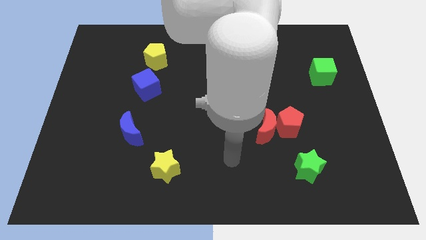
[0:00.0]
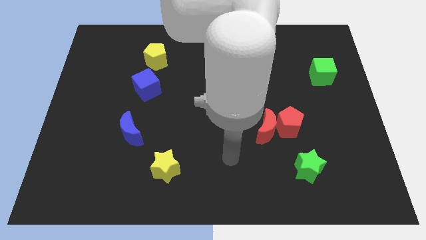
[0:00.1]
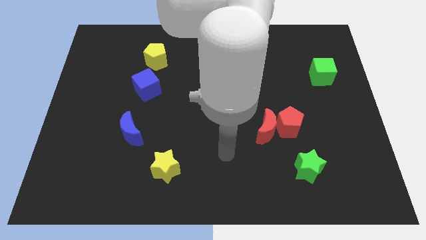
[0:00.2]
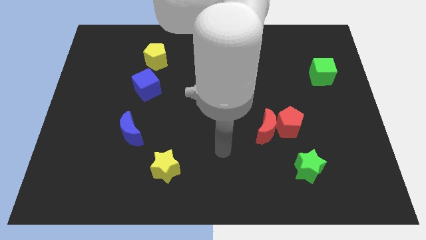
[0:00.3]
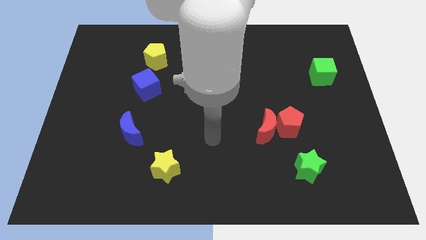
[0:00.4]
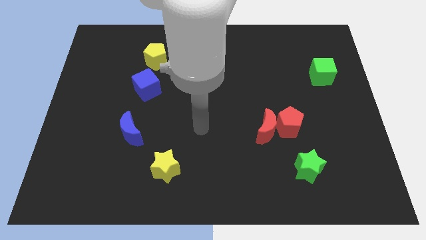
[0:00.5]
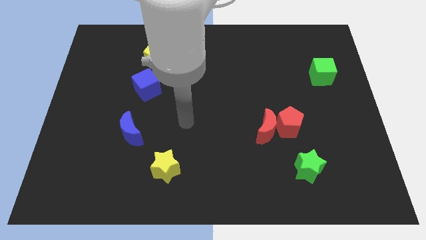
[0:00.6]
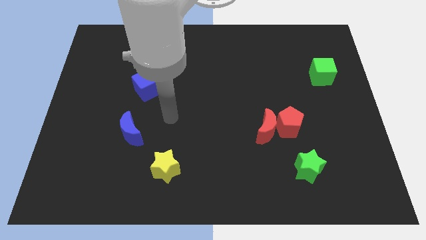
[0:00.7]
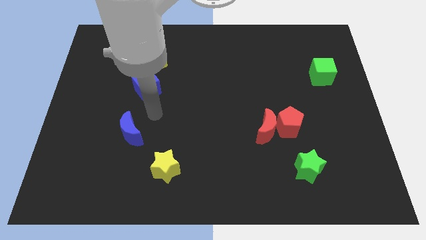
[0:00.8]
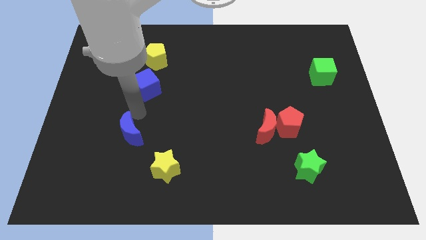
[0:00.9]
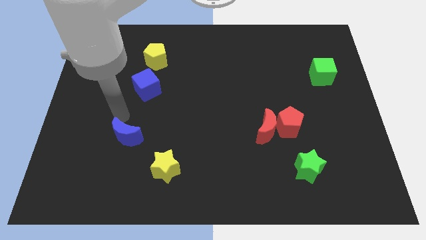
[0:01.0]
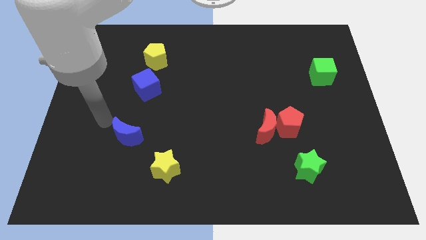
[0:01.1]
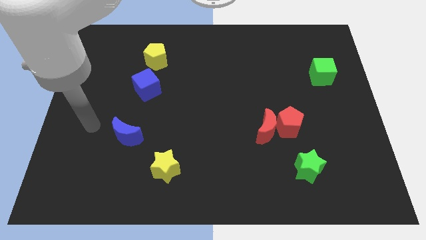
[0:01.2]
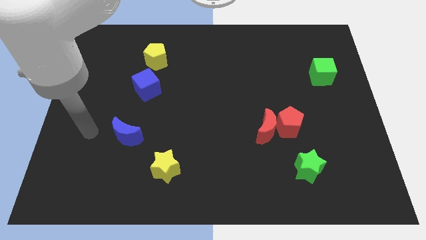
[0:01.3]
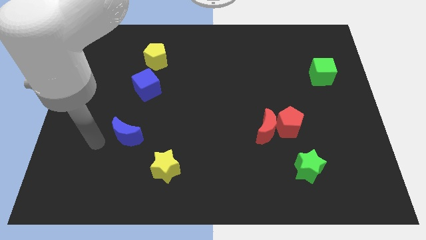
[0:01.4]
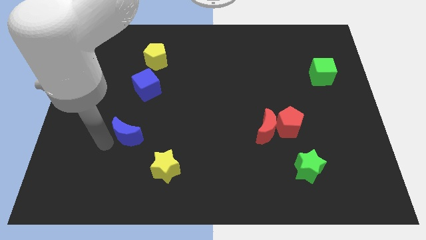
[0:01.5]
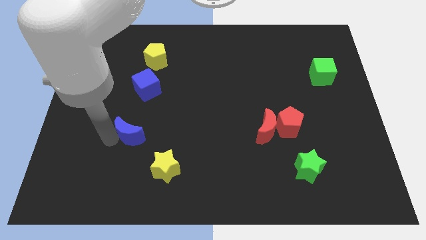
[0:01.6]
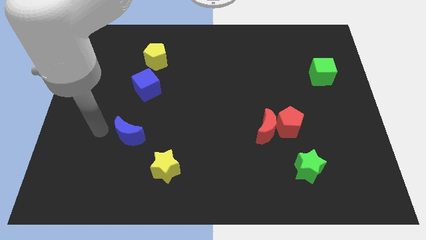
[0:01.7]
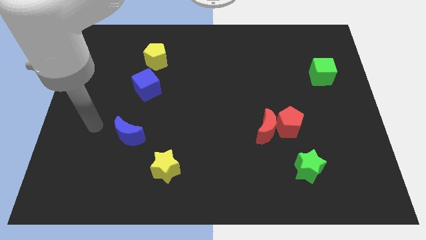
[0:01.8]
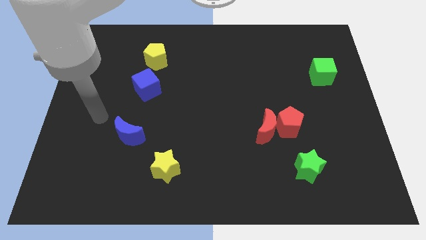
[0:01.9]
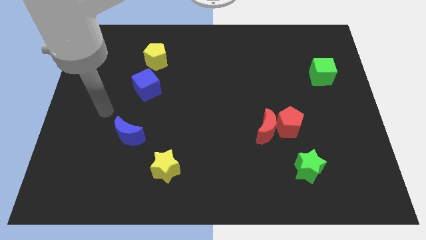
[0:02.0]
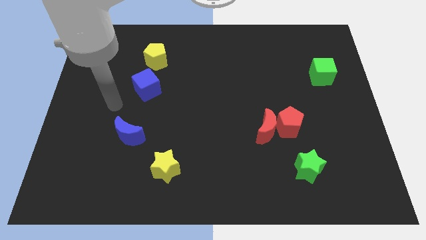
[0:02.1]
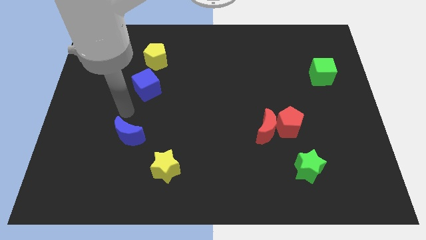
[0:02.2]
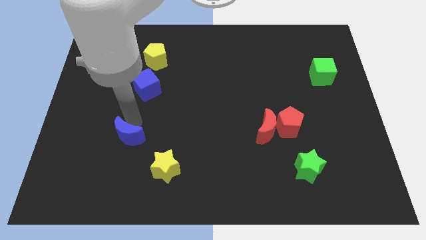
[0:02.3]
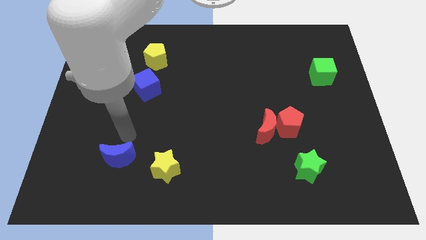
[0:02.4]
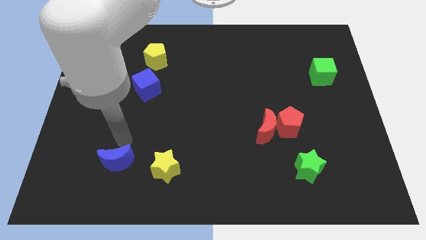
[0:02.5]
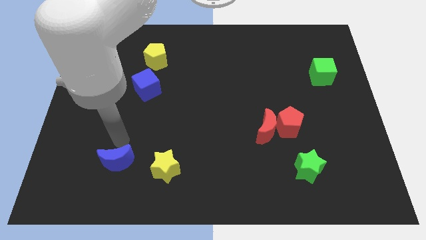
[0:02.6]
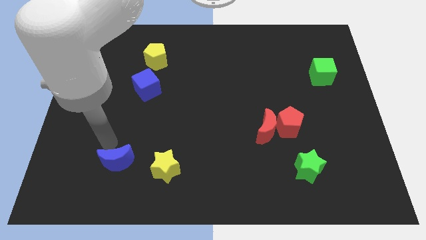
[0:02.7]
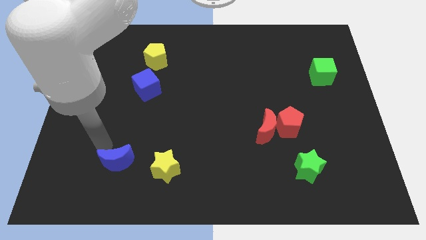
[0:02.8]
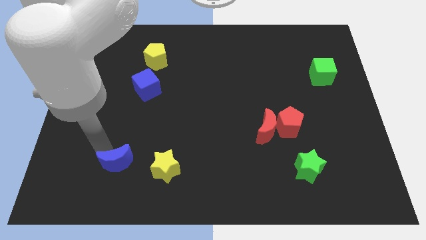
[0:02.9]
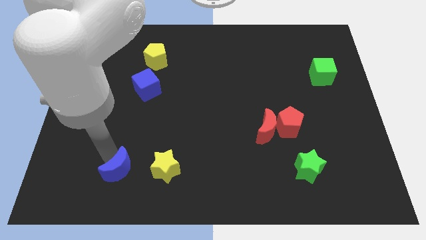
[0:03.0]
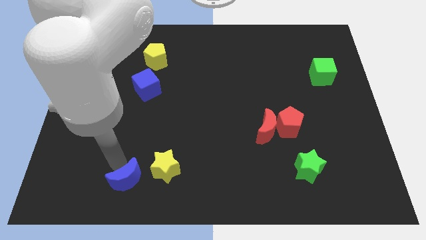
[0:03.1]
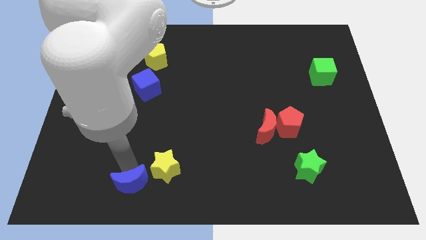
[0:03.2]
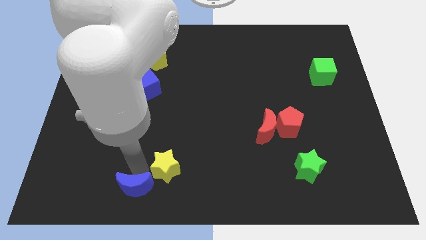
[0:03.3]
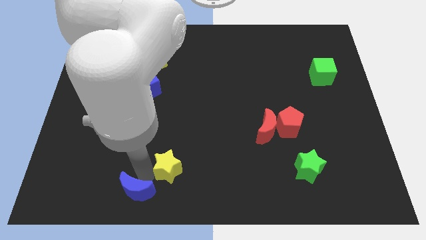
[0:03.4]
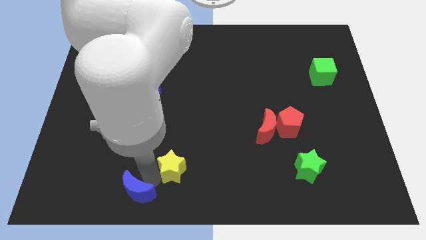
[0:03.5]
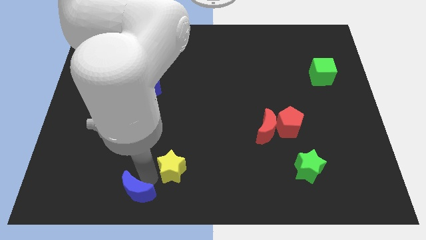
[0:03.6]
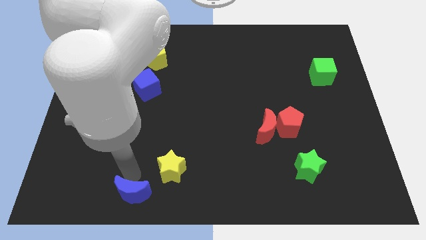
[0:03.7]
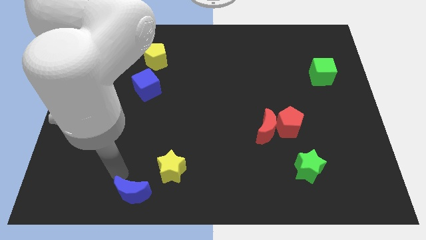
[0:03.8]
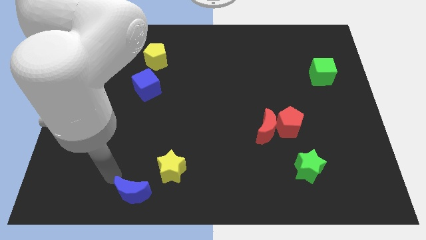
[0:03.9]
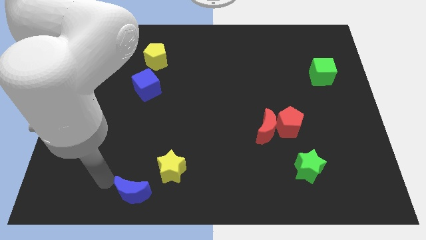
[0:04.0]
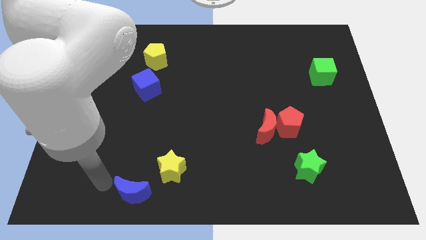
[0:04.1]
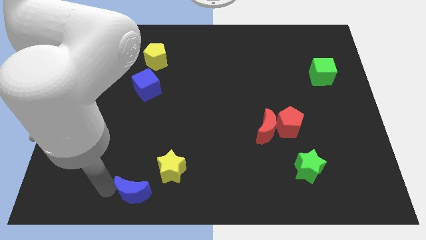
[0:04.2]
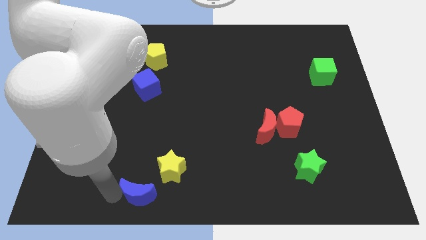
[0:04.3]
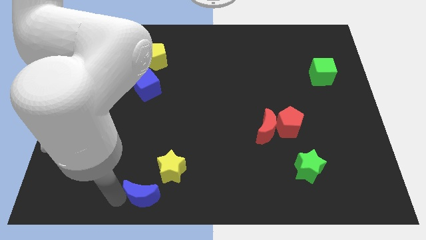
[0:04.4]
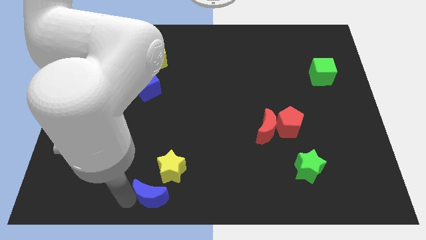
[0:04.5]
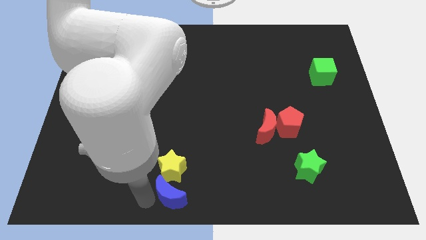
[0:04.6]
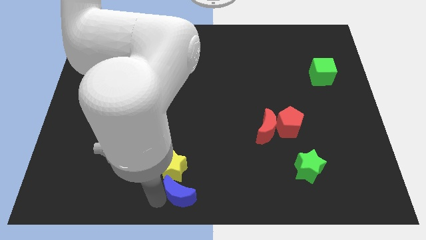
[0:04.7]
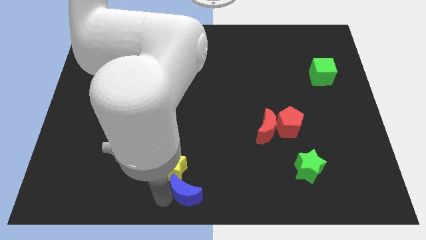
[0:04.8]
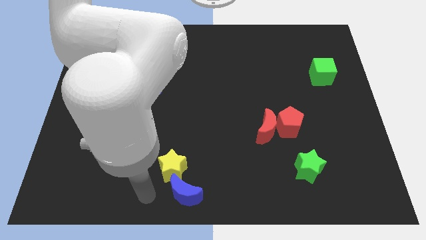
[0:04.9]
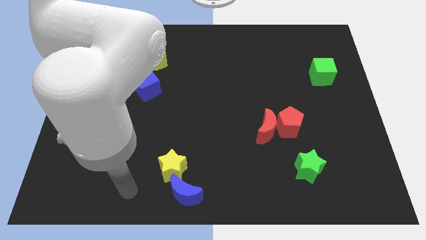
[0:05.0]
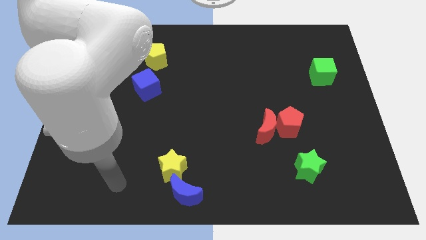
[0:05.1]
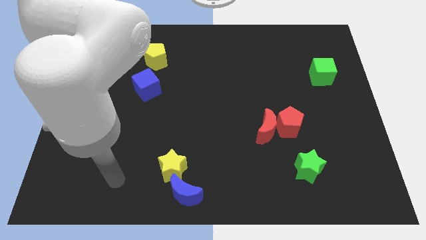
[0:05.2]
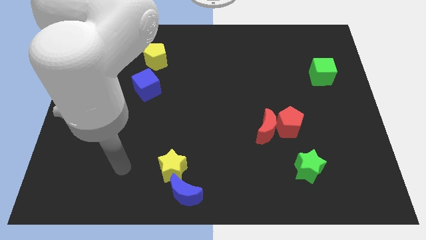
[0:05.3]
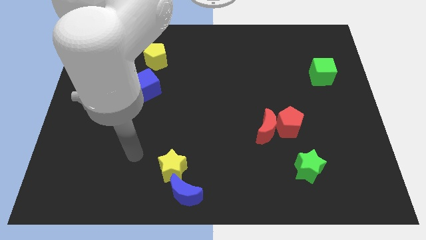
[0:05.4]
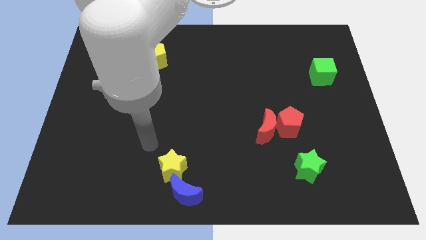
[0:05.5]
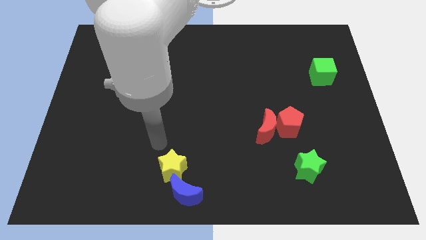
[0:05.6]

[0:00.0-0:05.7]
place the blue crescent near the yellow star

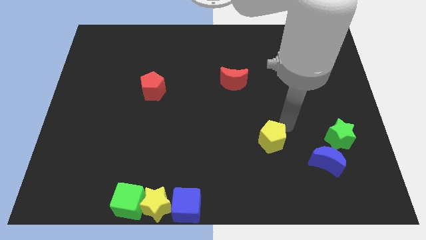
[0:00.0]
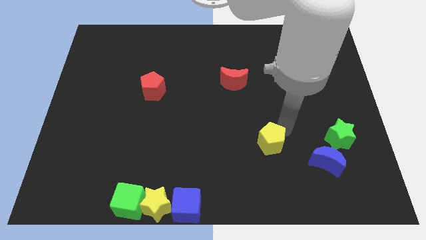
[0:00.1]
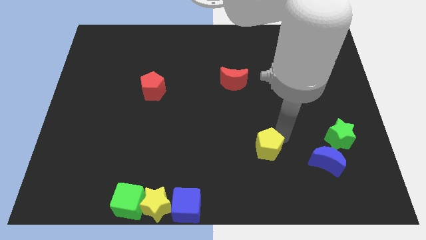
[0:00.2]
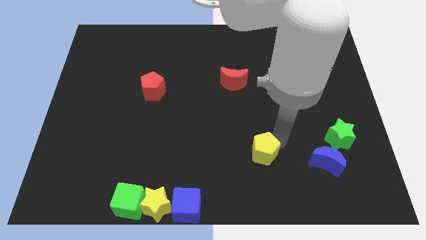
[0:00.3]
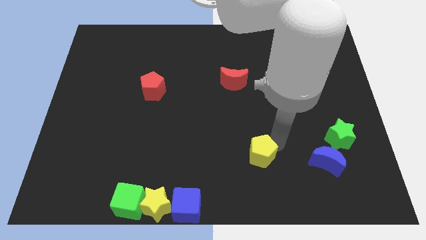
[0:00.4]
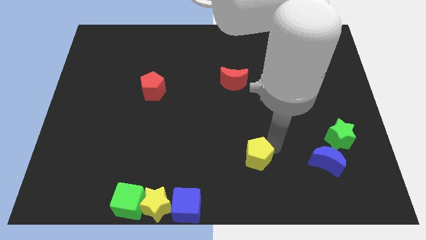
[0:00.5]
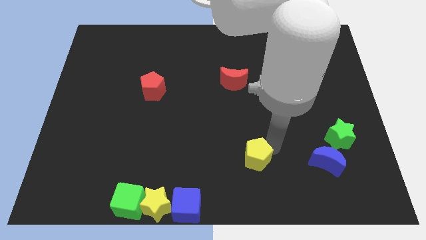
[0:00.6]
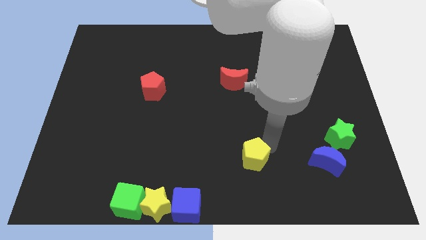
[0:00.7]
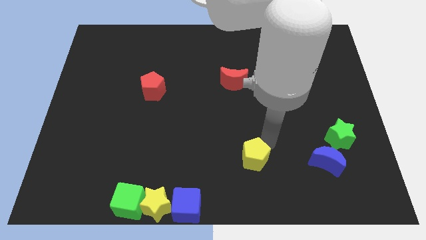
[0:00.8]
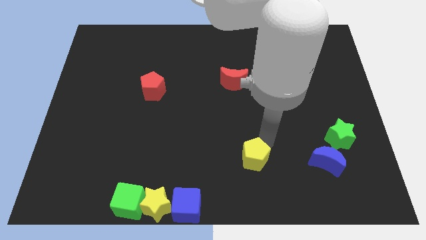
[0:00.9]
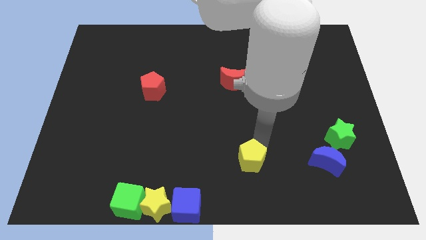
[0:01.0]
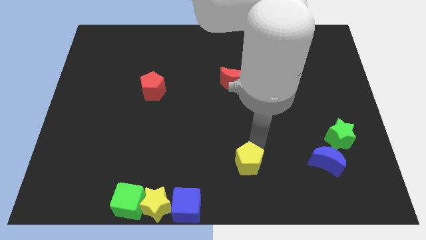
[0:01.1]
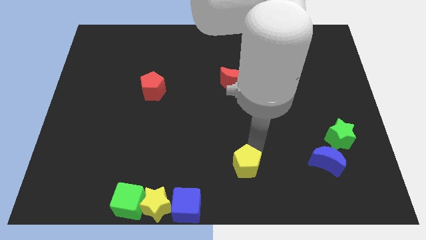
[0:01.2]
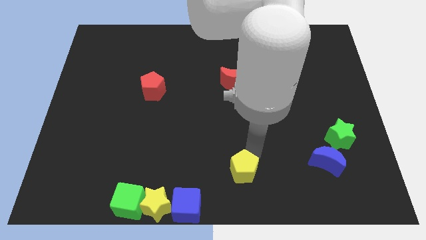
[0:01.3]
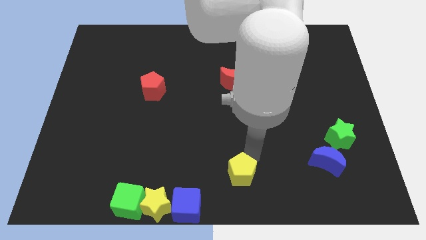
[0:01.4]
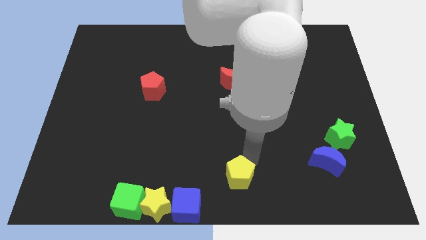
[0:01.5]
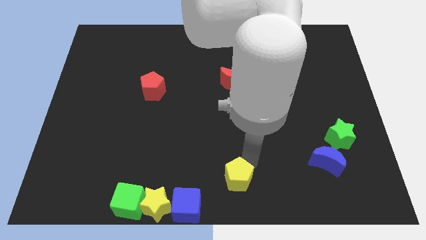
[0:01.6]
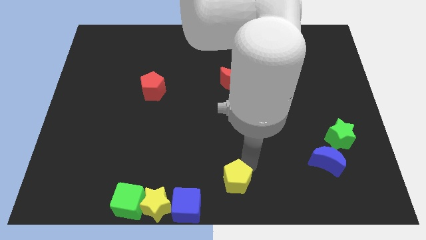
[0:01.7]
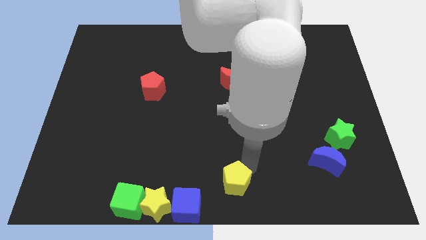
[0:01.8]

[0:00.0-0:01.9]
slide the yellow pentagon towards the bottom of the board

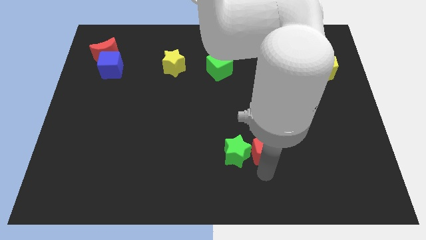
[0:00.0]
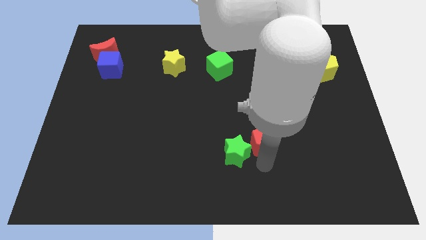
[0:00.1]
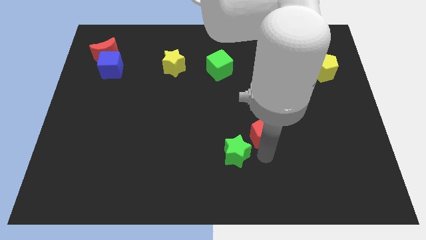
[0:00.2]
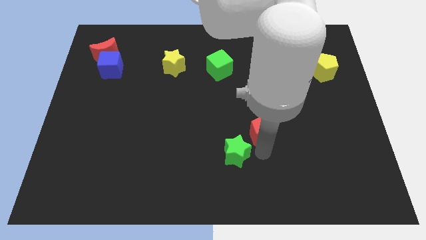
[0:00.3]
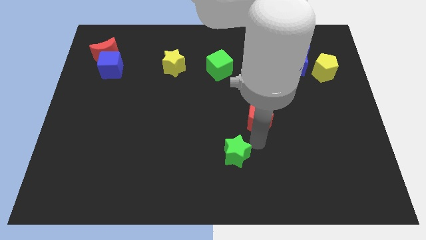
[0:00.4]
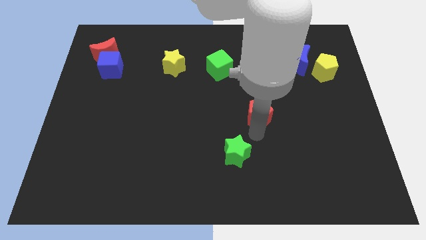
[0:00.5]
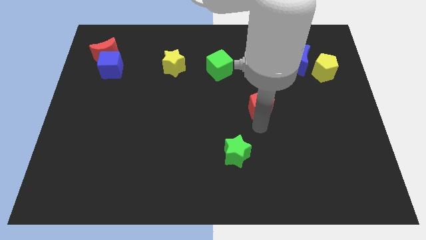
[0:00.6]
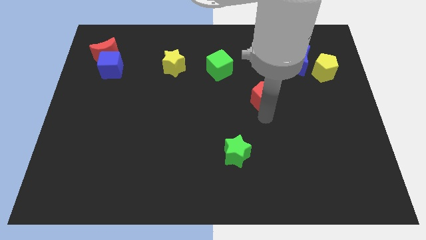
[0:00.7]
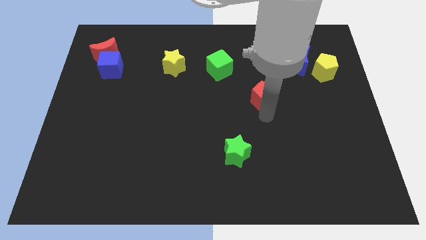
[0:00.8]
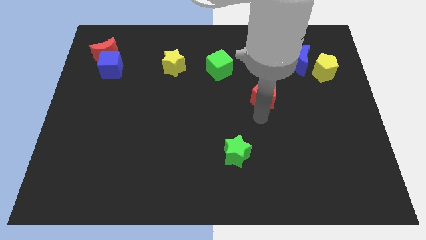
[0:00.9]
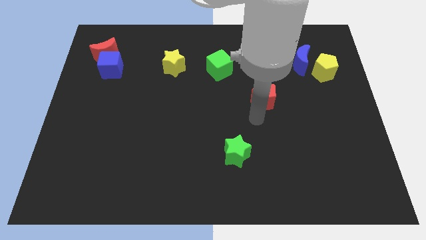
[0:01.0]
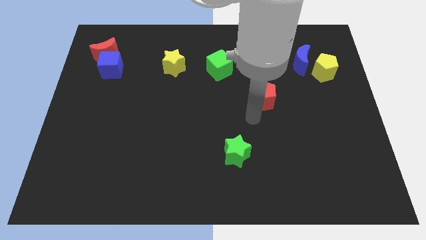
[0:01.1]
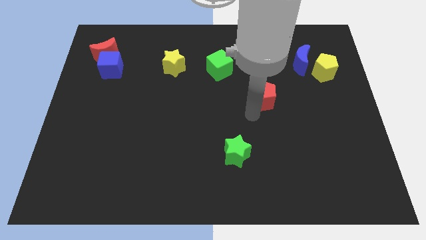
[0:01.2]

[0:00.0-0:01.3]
separate the red pentagon and the green star
